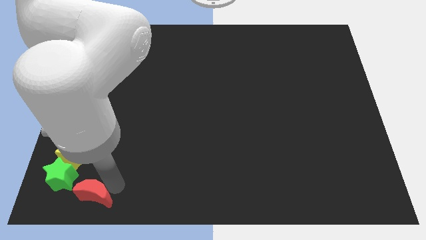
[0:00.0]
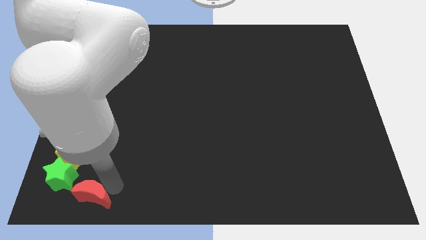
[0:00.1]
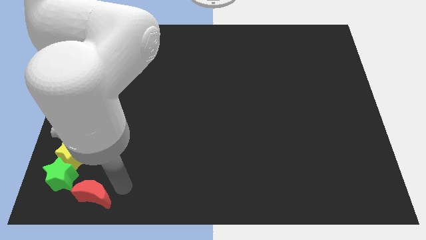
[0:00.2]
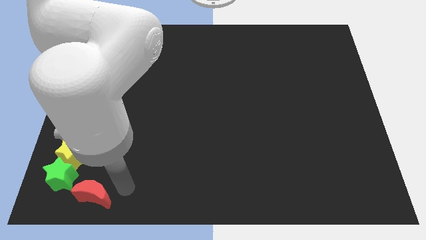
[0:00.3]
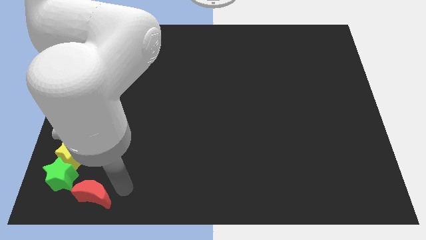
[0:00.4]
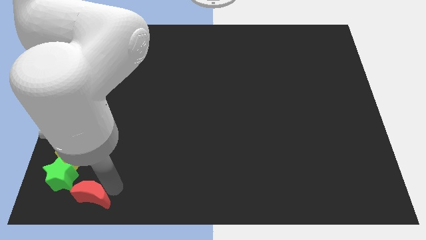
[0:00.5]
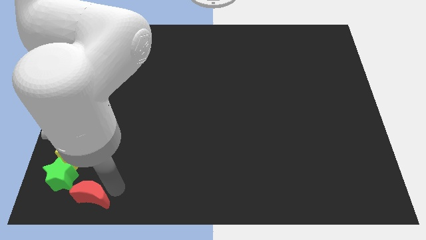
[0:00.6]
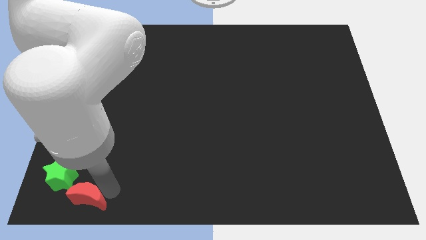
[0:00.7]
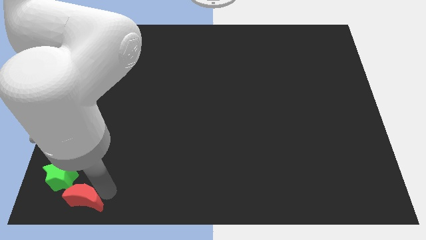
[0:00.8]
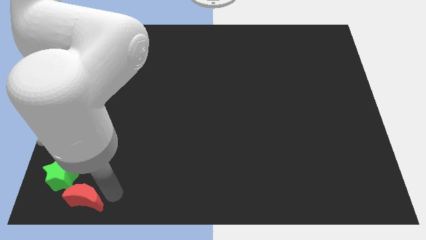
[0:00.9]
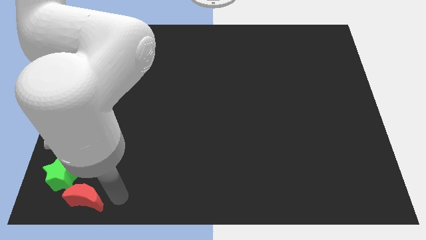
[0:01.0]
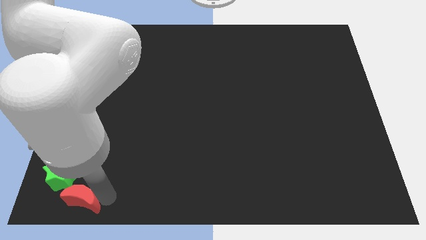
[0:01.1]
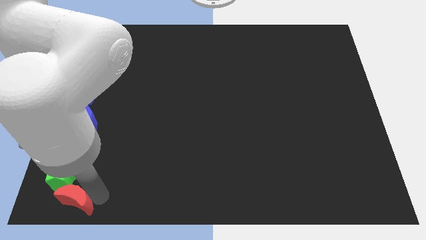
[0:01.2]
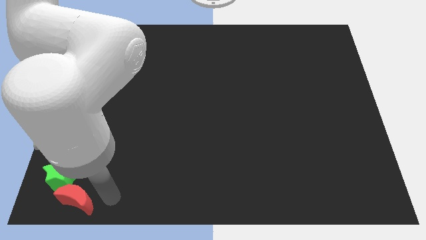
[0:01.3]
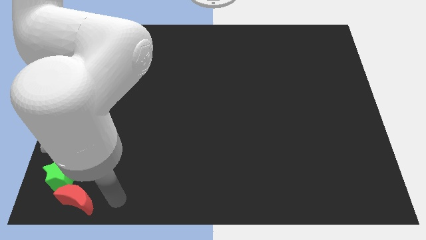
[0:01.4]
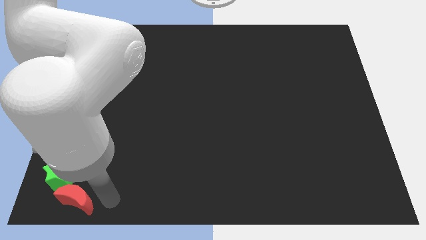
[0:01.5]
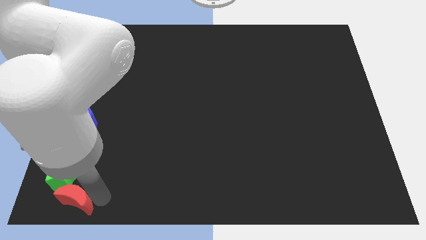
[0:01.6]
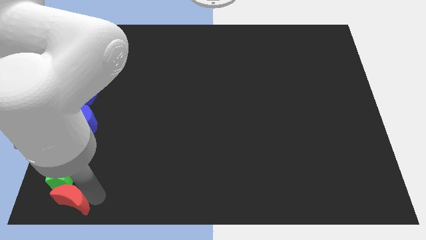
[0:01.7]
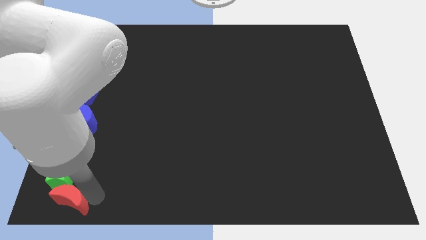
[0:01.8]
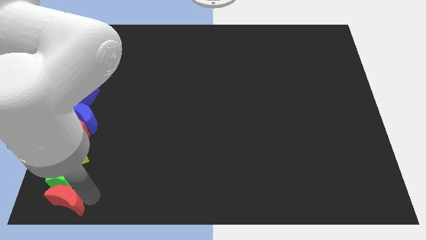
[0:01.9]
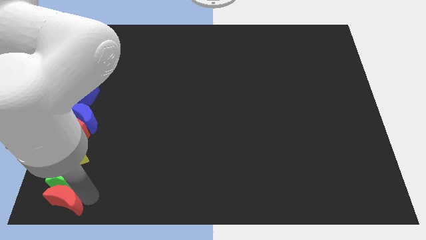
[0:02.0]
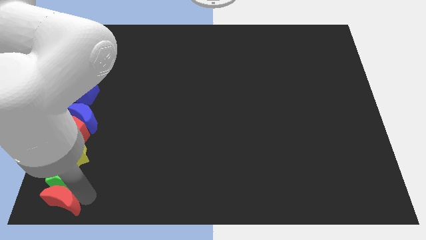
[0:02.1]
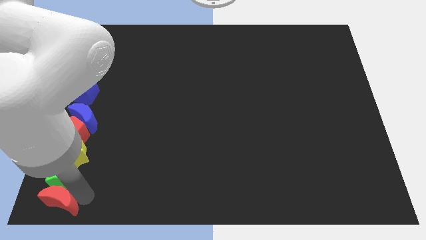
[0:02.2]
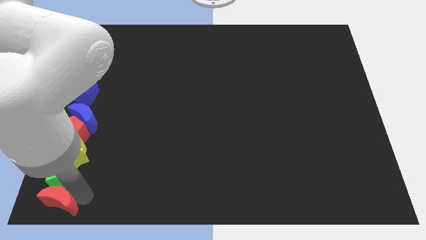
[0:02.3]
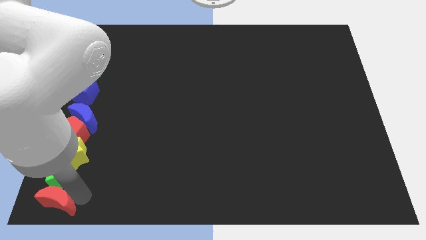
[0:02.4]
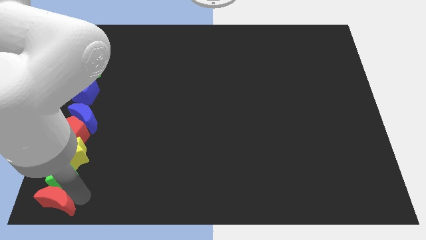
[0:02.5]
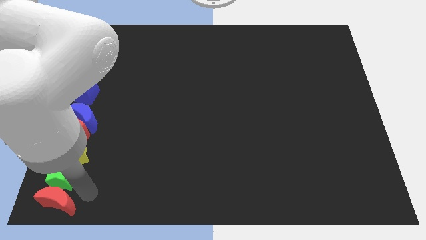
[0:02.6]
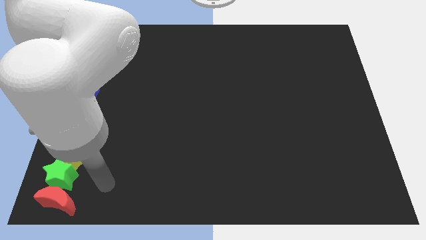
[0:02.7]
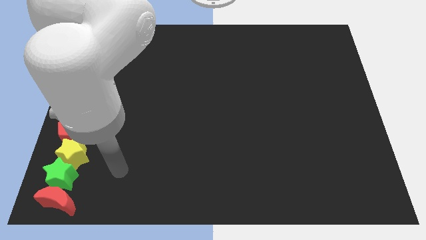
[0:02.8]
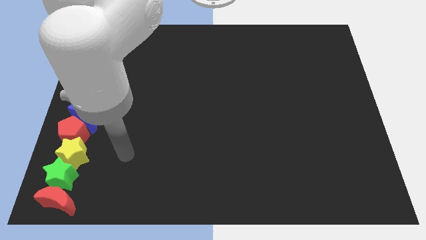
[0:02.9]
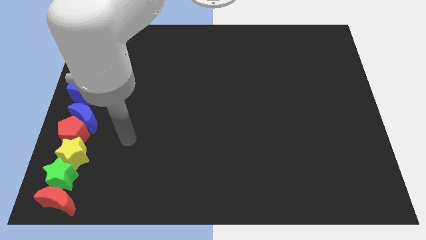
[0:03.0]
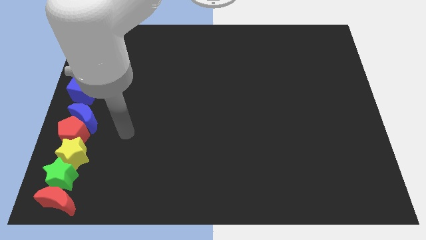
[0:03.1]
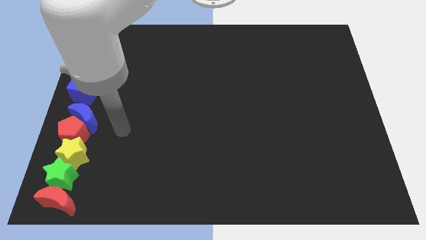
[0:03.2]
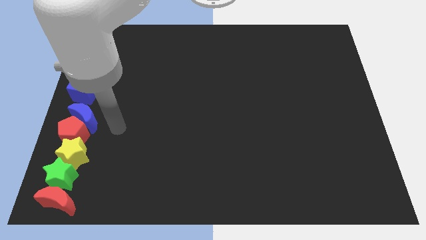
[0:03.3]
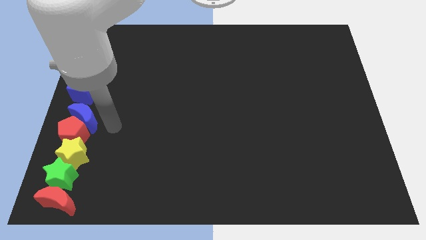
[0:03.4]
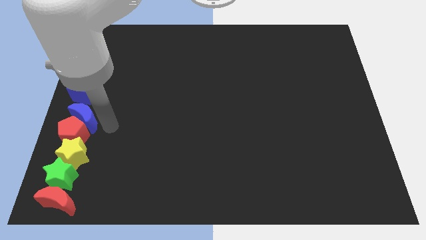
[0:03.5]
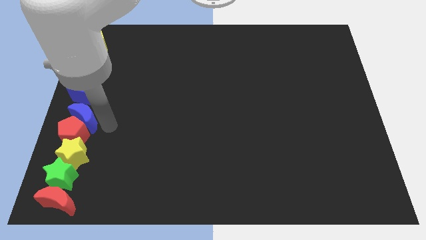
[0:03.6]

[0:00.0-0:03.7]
line the blocks up vertically

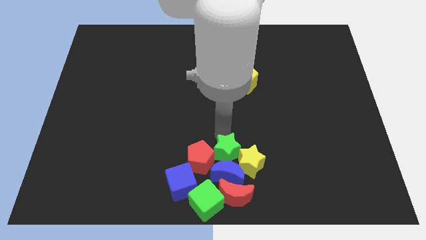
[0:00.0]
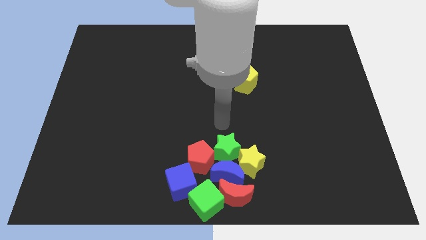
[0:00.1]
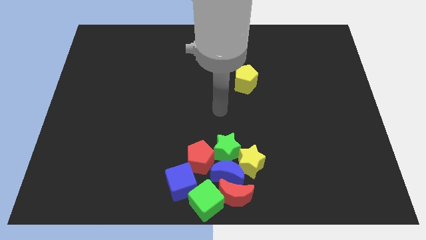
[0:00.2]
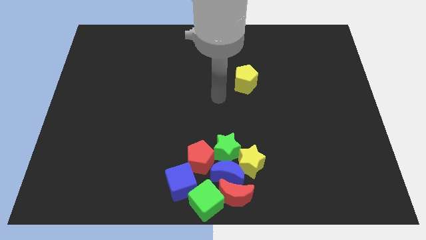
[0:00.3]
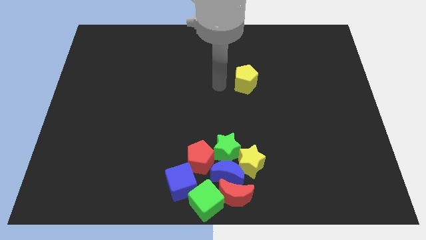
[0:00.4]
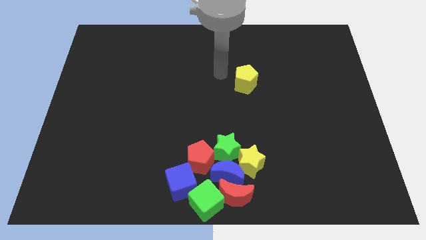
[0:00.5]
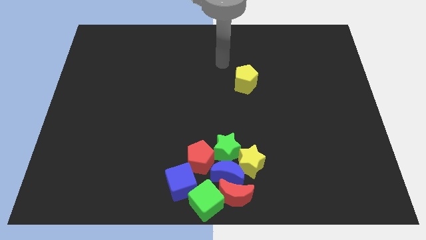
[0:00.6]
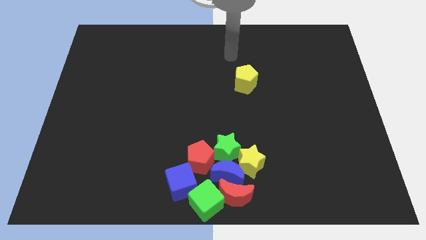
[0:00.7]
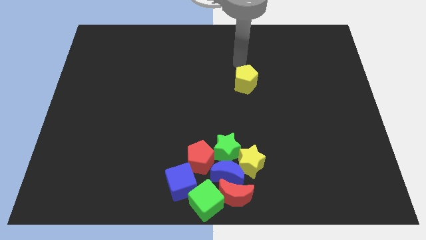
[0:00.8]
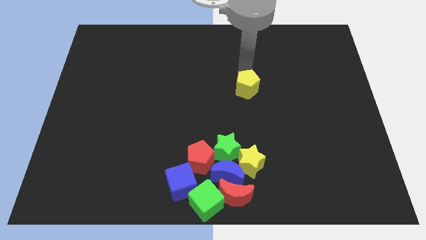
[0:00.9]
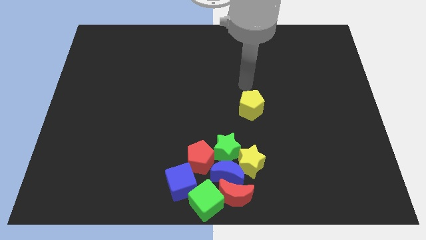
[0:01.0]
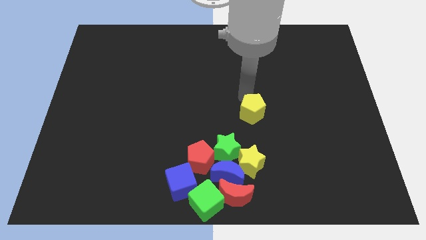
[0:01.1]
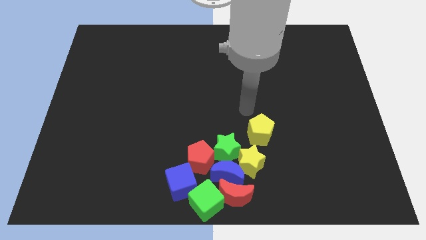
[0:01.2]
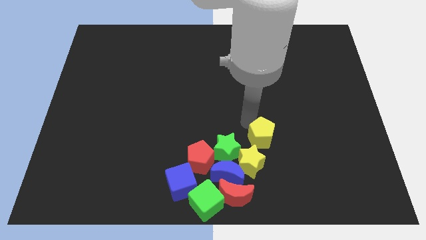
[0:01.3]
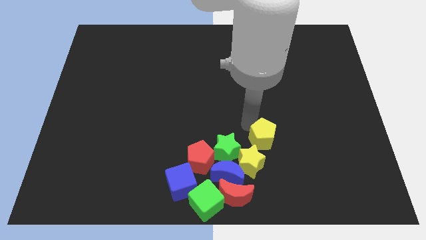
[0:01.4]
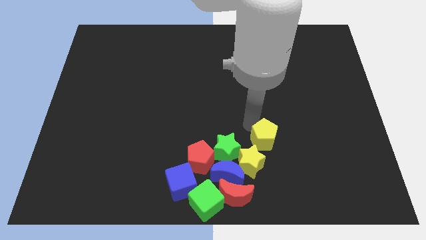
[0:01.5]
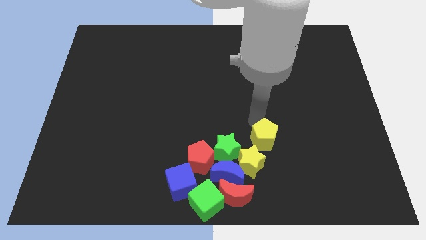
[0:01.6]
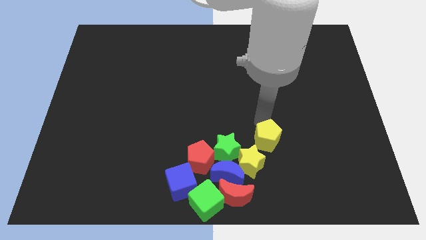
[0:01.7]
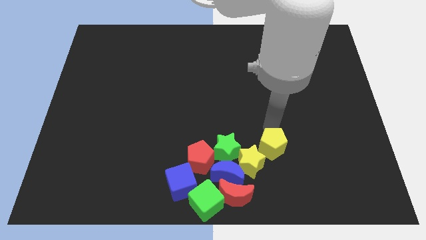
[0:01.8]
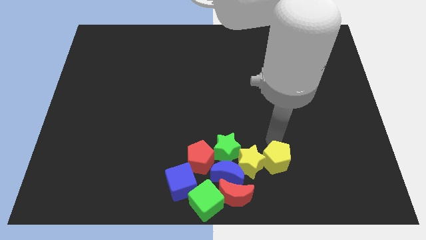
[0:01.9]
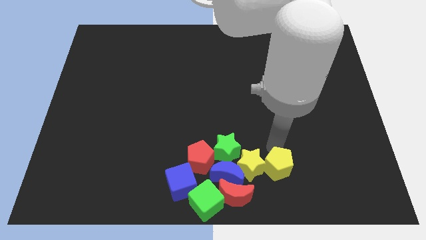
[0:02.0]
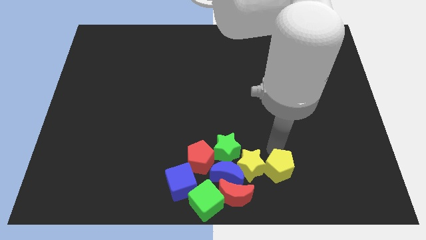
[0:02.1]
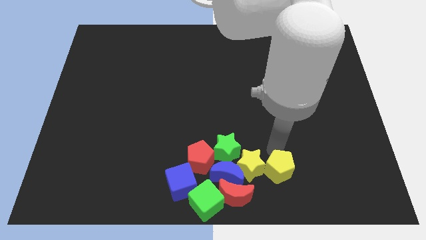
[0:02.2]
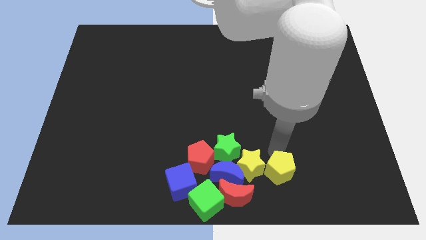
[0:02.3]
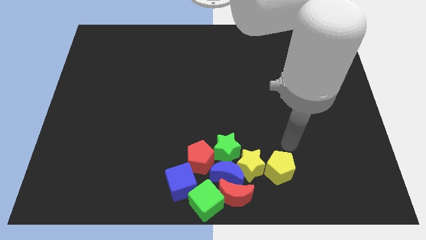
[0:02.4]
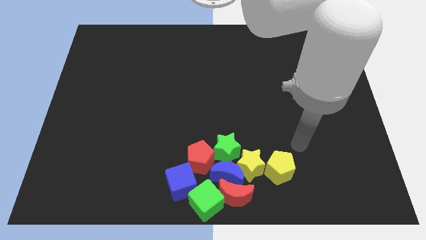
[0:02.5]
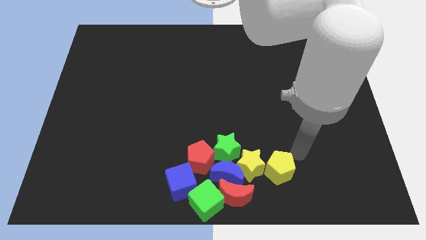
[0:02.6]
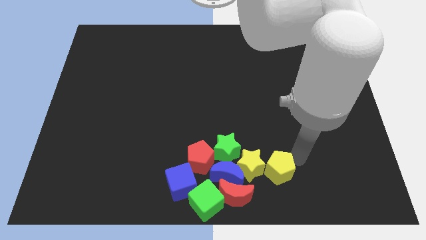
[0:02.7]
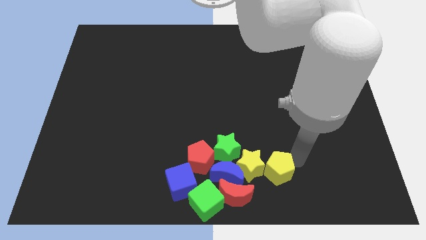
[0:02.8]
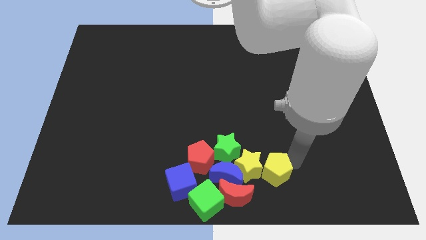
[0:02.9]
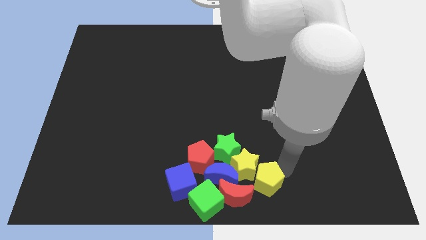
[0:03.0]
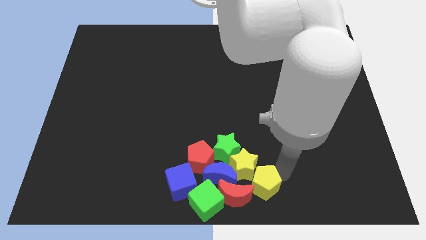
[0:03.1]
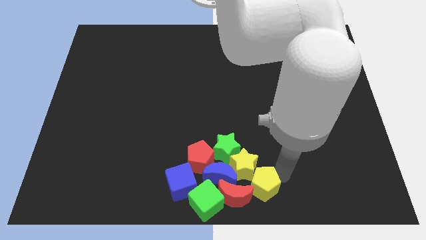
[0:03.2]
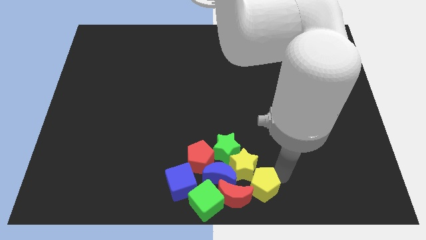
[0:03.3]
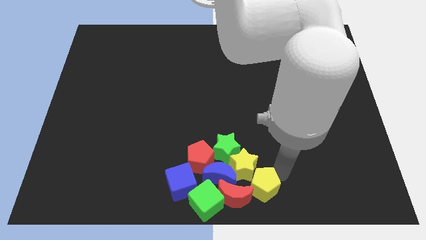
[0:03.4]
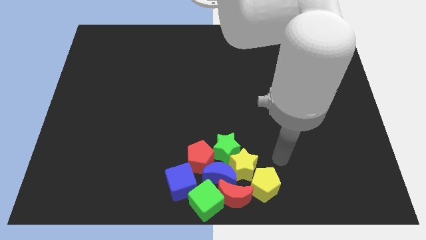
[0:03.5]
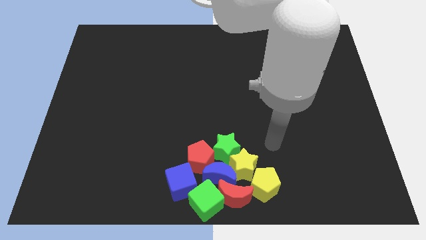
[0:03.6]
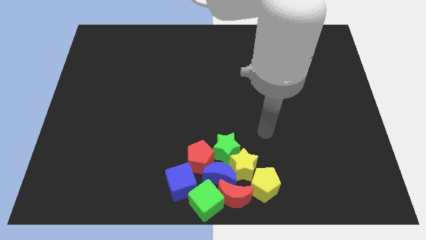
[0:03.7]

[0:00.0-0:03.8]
push the yellow pentagon towards the bottom side of the yellow star

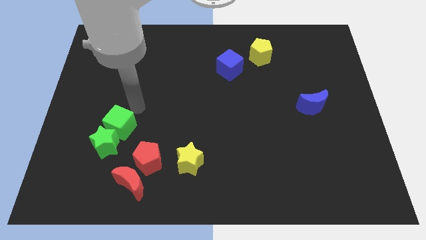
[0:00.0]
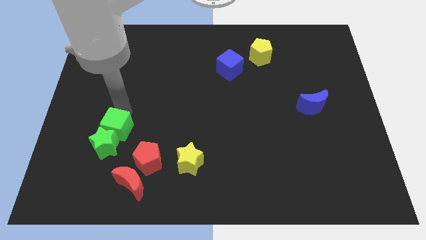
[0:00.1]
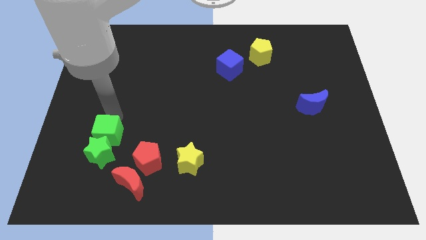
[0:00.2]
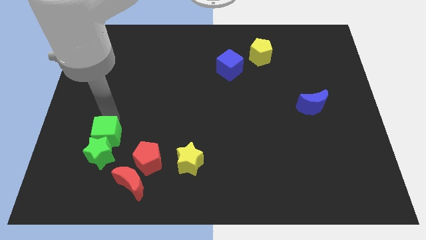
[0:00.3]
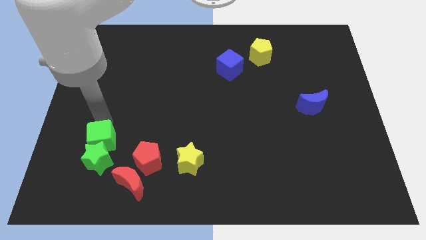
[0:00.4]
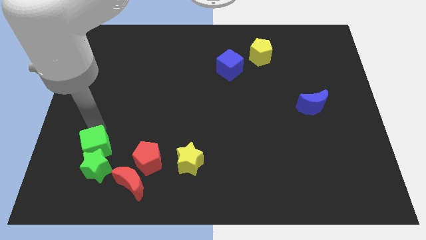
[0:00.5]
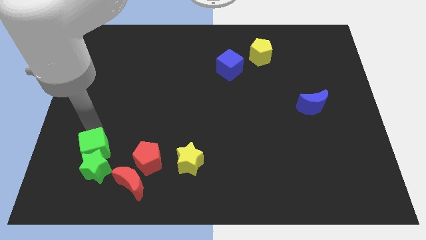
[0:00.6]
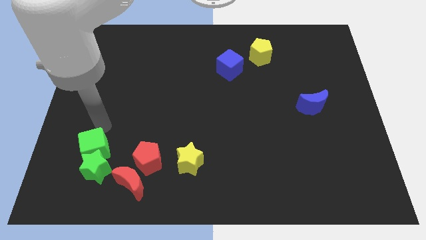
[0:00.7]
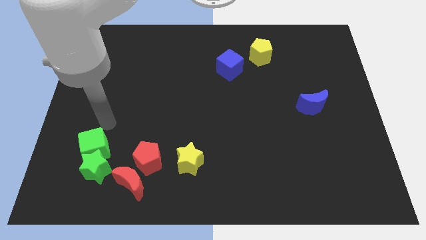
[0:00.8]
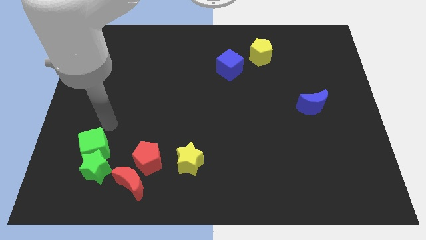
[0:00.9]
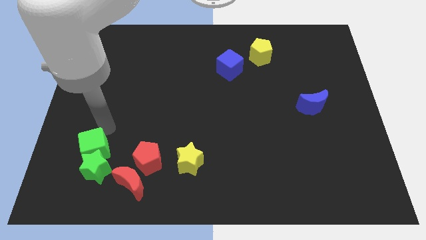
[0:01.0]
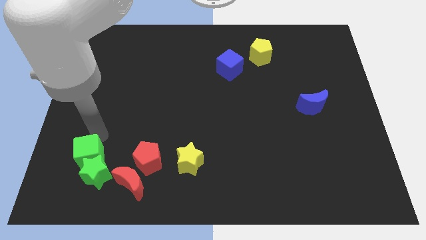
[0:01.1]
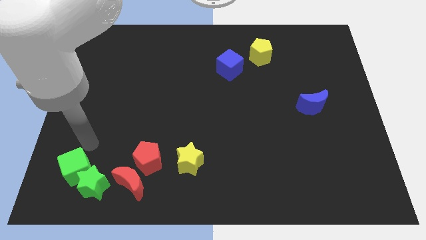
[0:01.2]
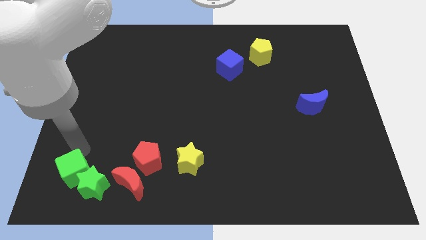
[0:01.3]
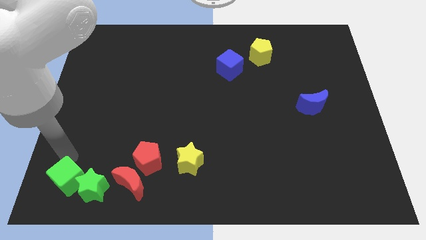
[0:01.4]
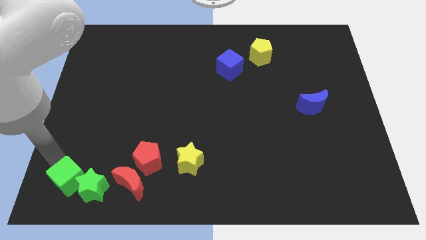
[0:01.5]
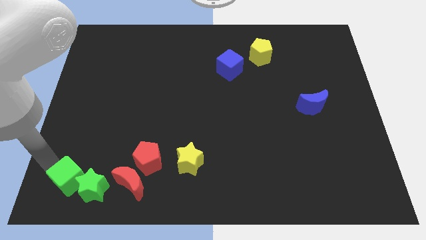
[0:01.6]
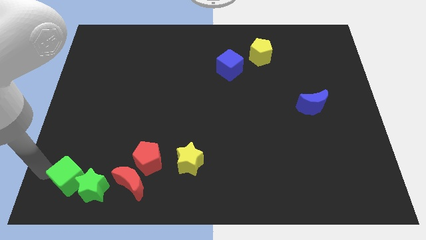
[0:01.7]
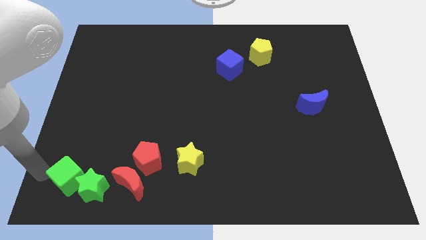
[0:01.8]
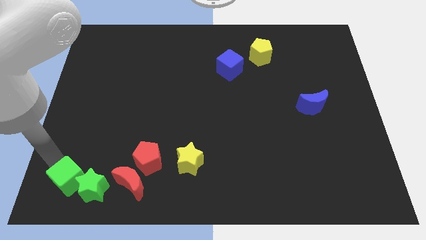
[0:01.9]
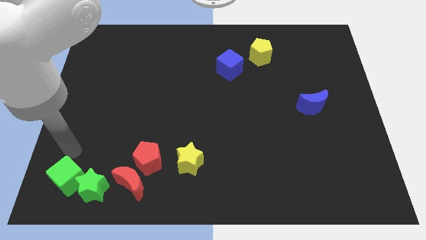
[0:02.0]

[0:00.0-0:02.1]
push the green blocks to the left of red blocks
